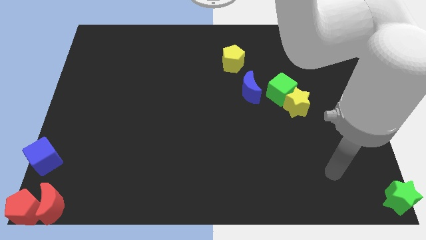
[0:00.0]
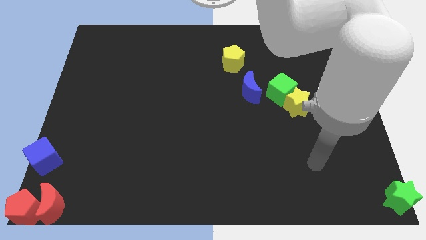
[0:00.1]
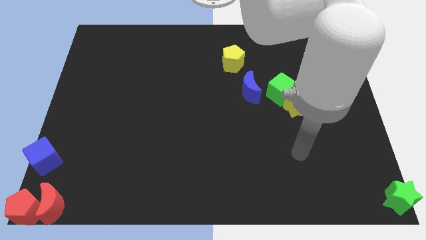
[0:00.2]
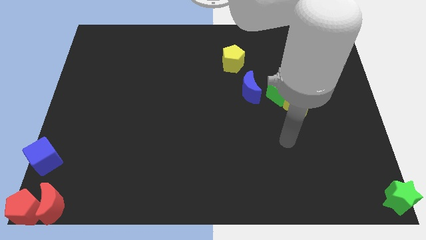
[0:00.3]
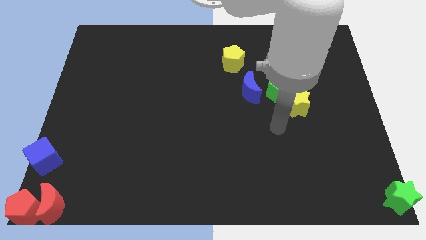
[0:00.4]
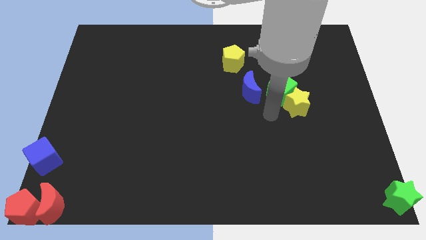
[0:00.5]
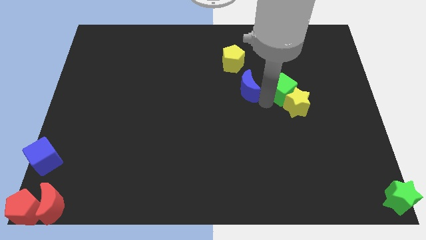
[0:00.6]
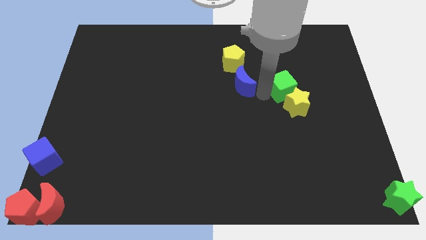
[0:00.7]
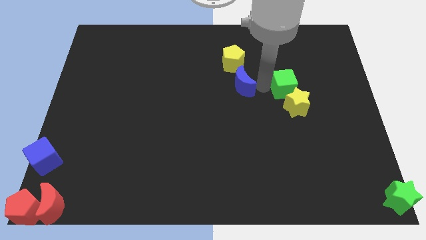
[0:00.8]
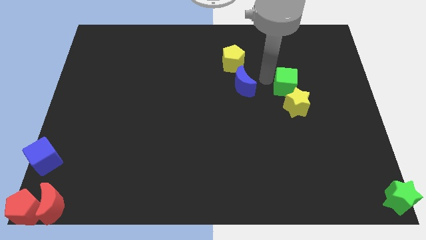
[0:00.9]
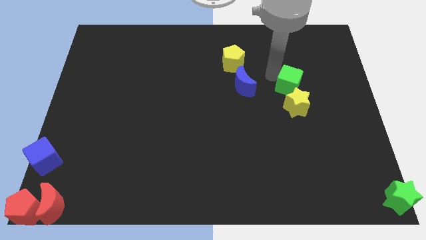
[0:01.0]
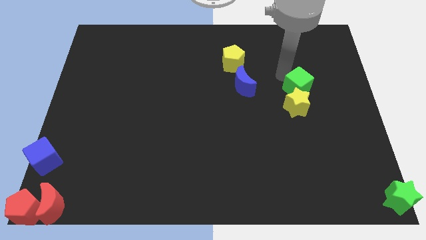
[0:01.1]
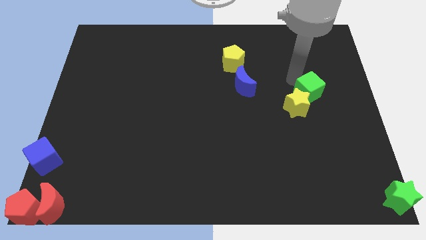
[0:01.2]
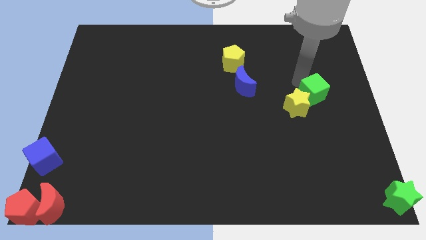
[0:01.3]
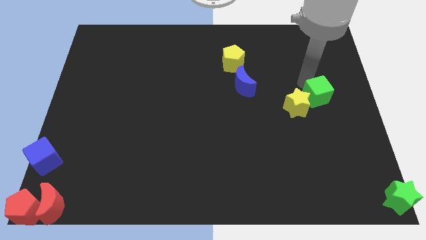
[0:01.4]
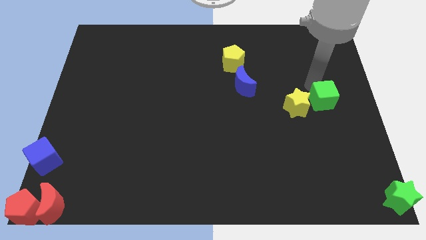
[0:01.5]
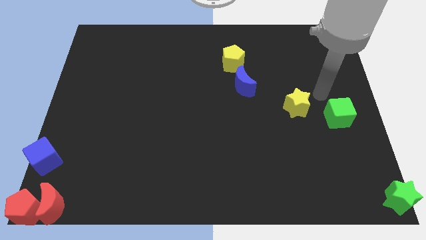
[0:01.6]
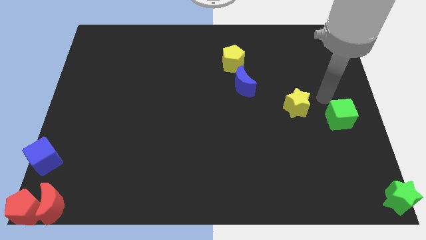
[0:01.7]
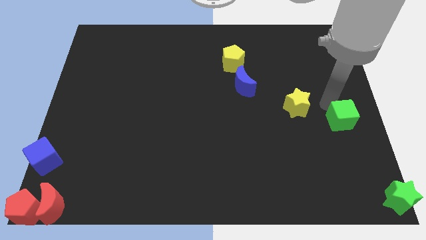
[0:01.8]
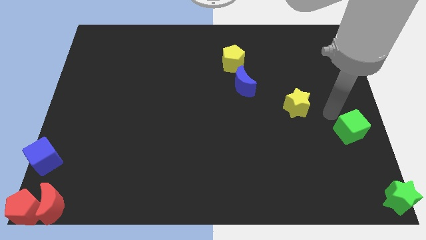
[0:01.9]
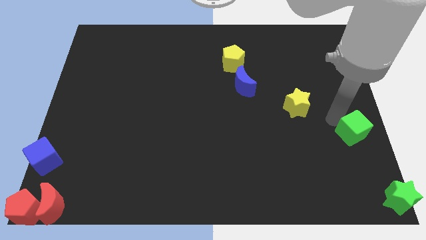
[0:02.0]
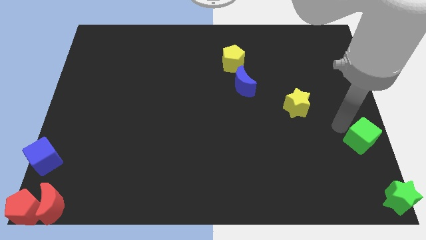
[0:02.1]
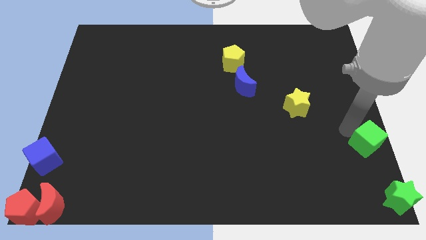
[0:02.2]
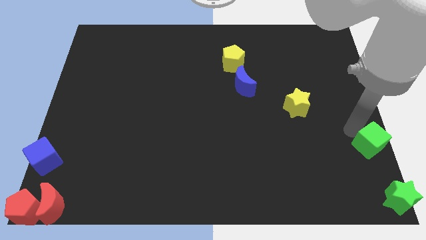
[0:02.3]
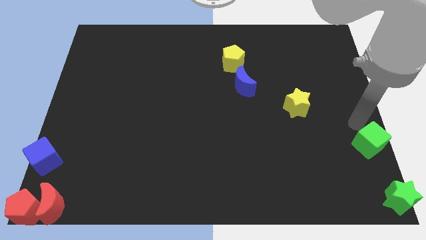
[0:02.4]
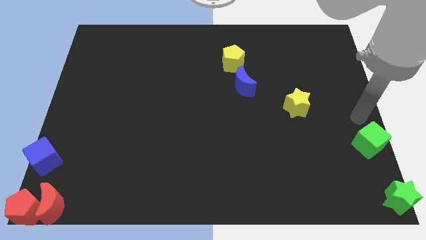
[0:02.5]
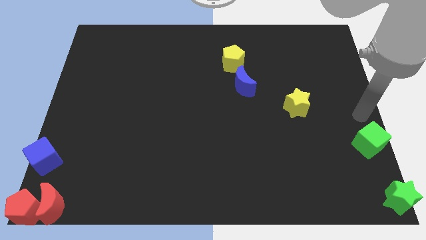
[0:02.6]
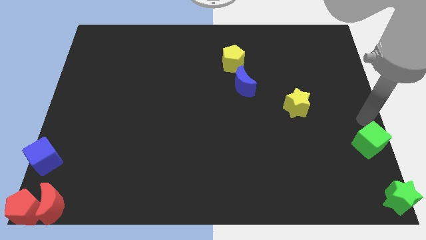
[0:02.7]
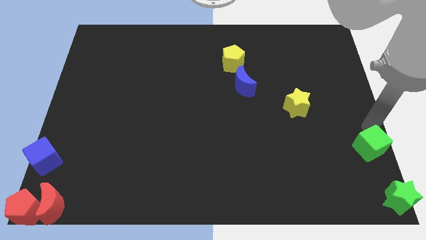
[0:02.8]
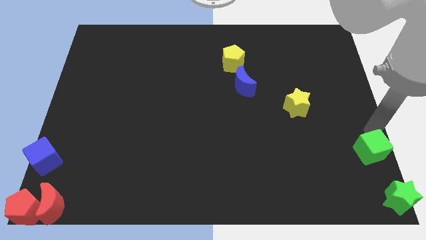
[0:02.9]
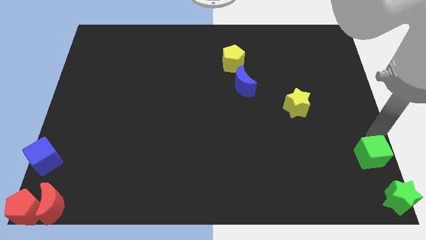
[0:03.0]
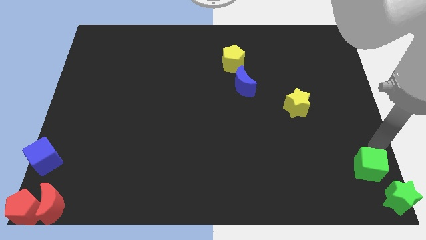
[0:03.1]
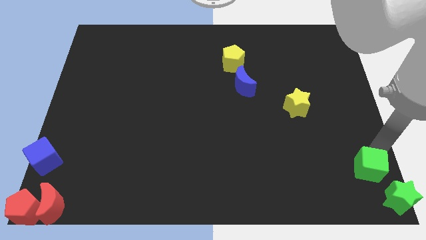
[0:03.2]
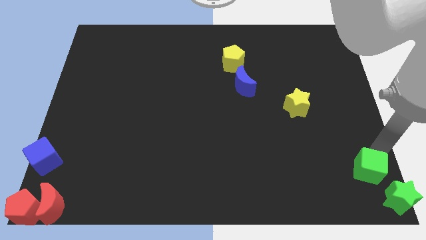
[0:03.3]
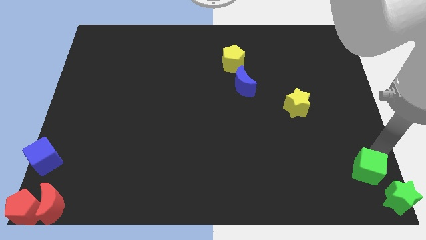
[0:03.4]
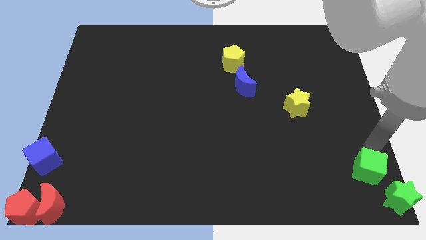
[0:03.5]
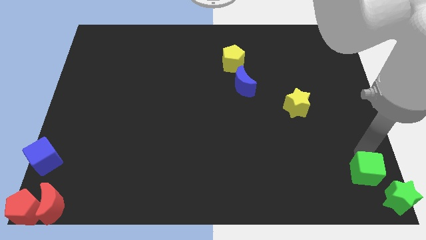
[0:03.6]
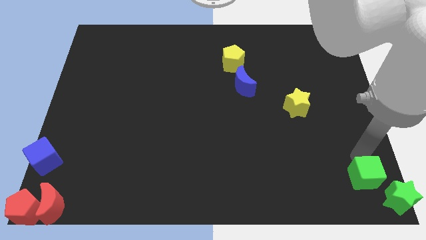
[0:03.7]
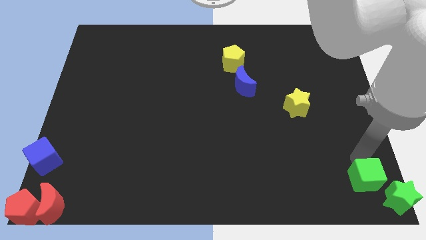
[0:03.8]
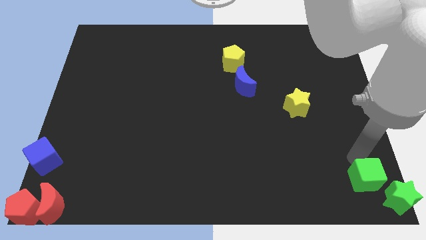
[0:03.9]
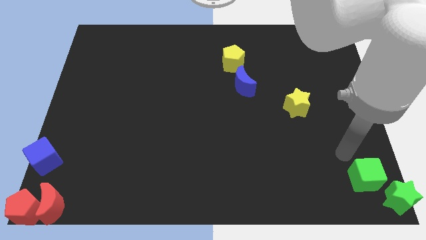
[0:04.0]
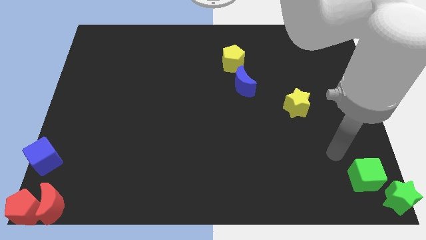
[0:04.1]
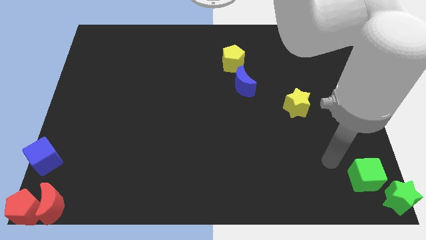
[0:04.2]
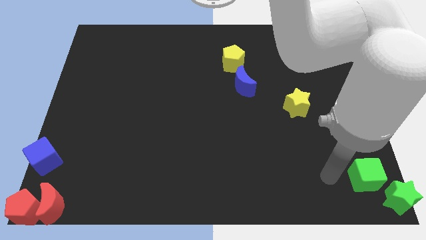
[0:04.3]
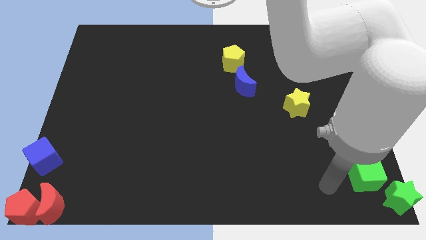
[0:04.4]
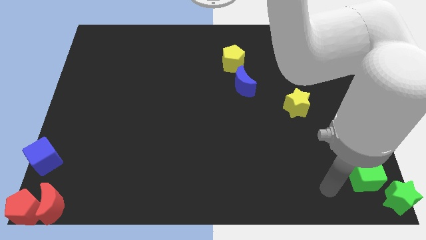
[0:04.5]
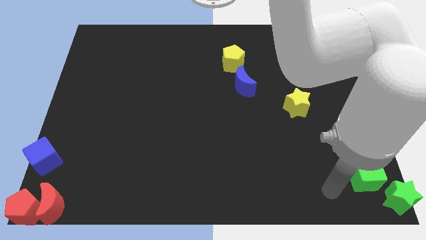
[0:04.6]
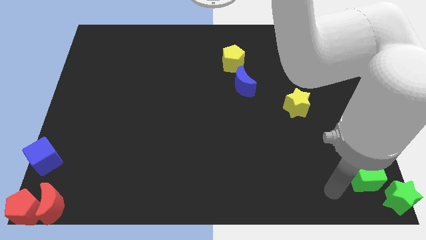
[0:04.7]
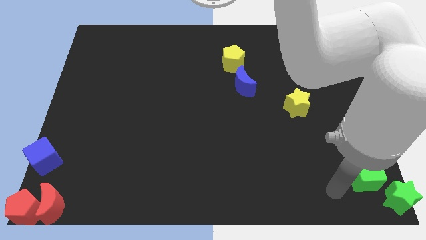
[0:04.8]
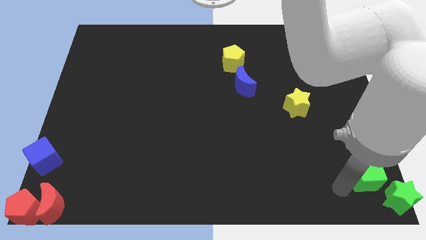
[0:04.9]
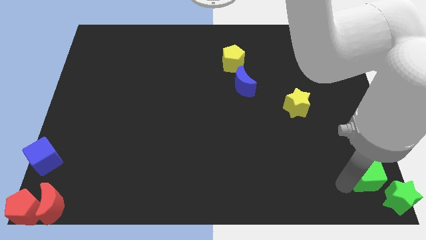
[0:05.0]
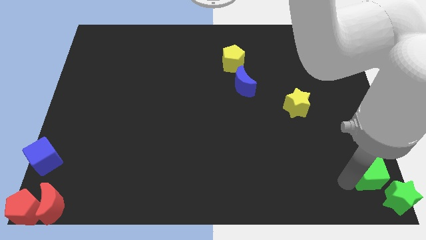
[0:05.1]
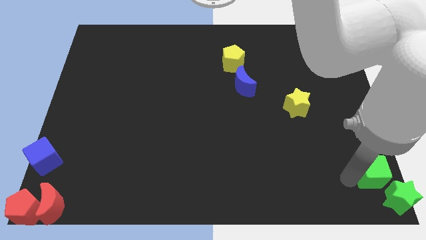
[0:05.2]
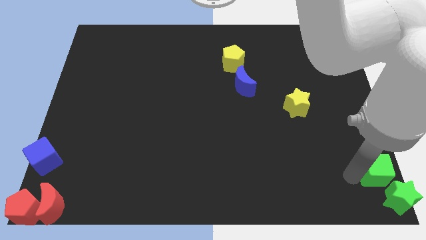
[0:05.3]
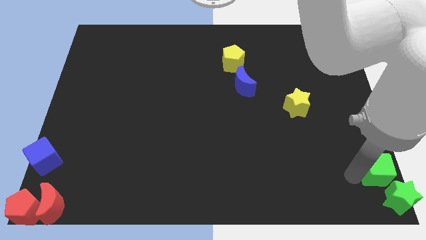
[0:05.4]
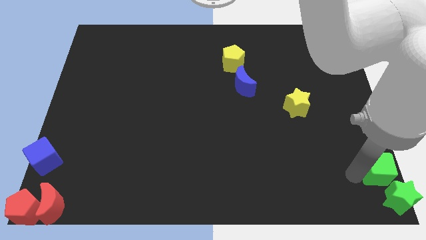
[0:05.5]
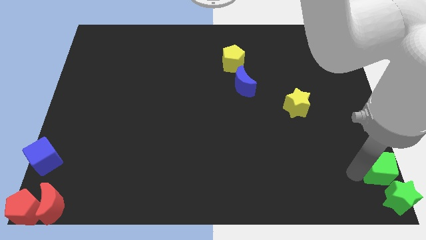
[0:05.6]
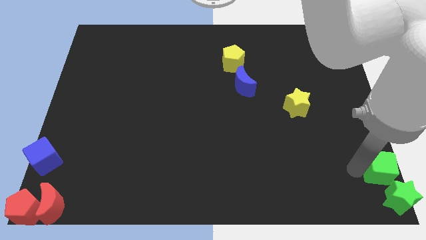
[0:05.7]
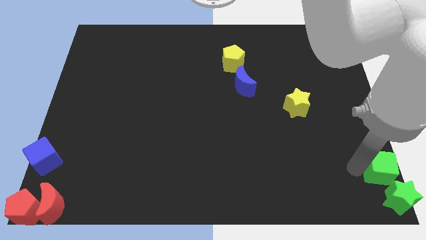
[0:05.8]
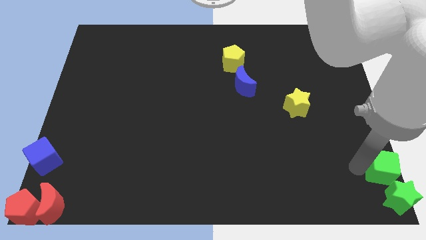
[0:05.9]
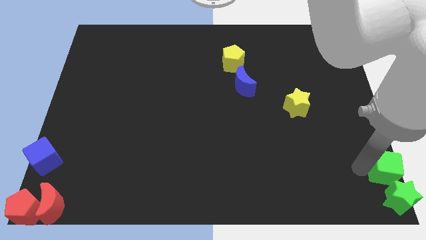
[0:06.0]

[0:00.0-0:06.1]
push the green cube to the top of the green star

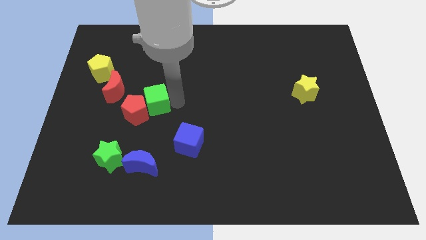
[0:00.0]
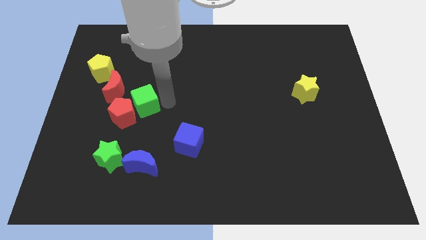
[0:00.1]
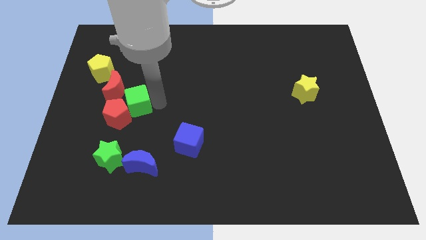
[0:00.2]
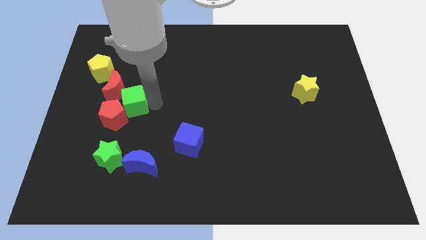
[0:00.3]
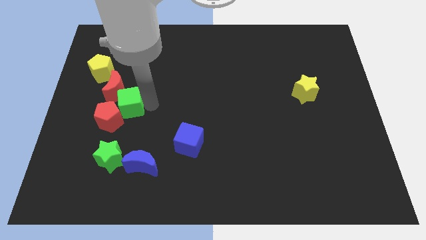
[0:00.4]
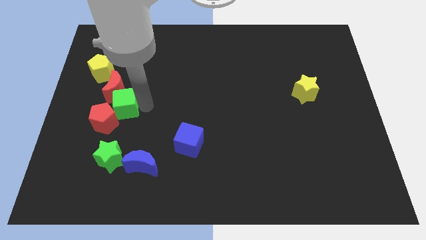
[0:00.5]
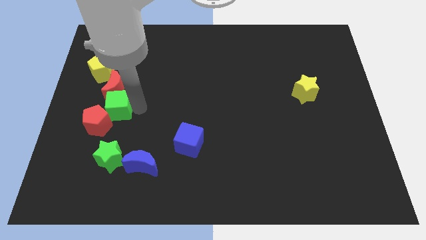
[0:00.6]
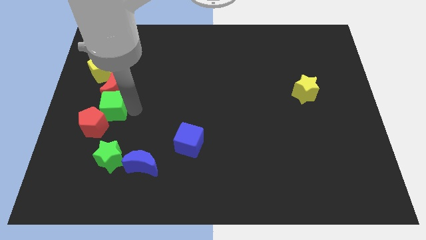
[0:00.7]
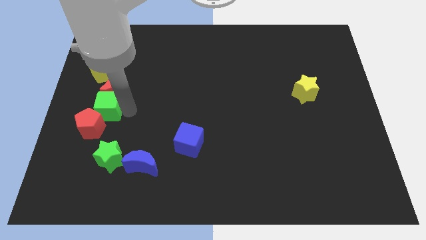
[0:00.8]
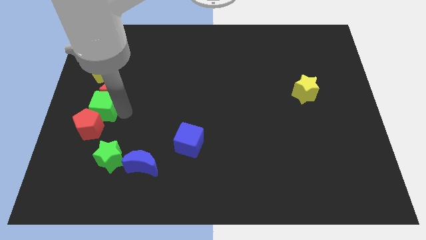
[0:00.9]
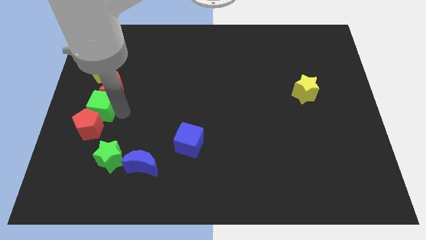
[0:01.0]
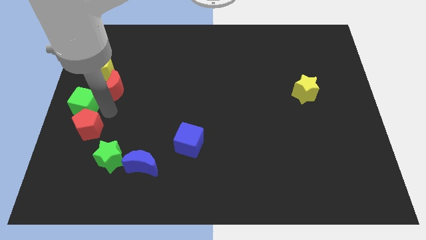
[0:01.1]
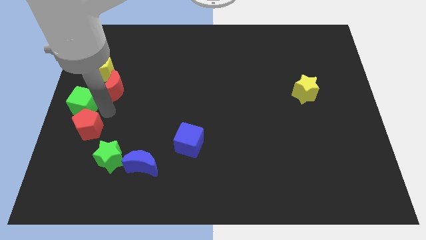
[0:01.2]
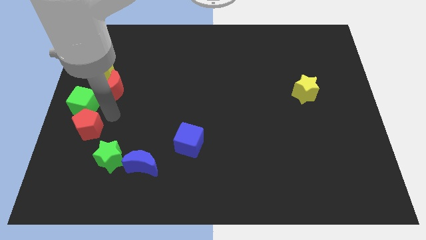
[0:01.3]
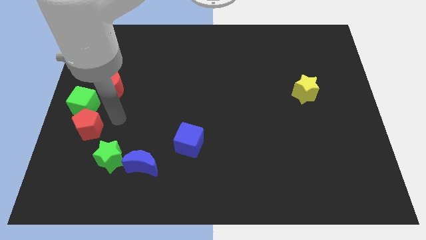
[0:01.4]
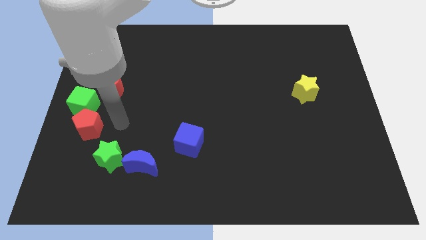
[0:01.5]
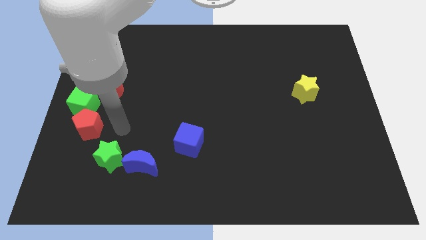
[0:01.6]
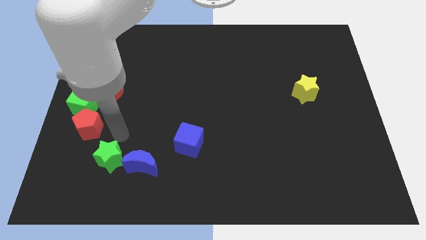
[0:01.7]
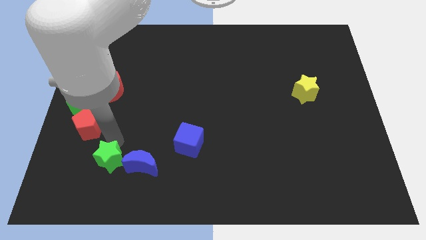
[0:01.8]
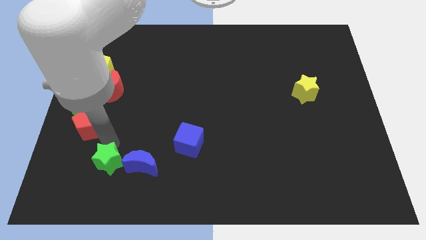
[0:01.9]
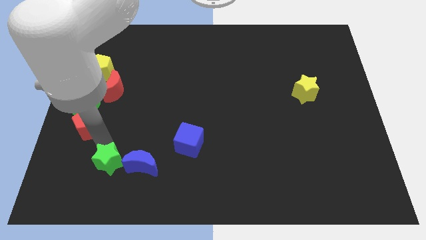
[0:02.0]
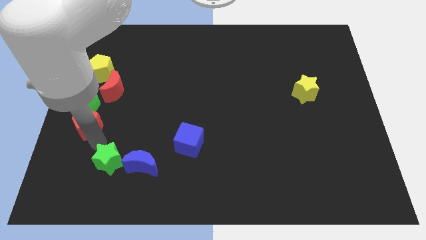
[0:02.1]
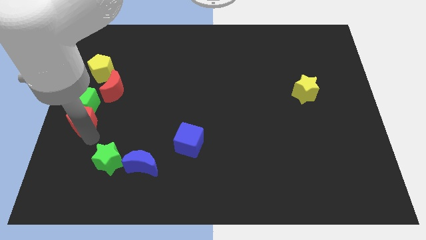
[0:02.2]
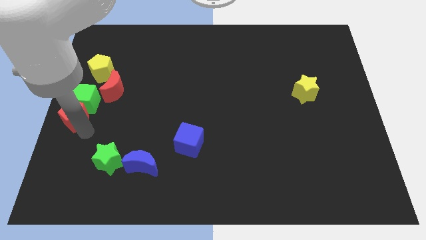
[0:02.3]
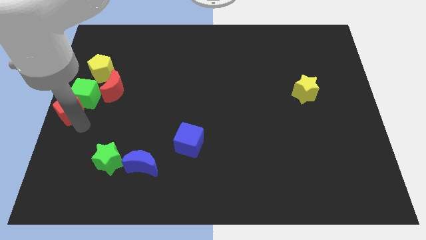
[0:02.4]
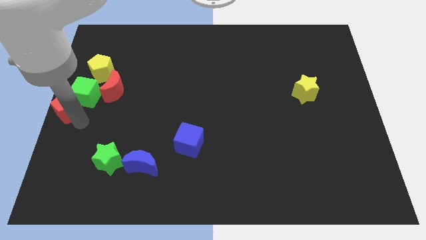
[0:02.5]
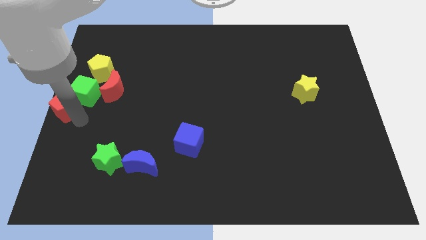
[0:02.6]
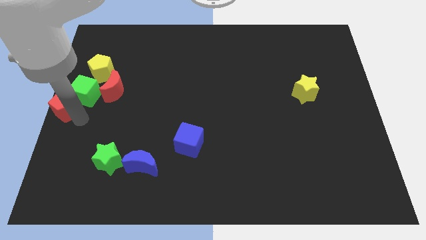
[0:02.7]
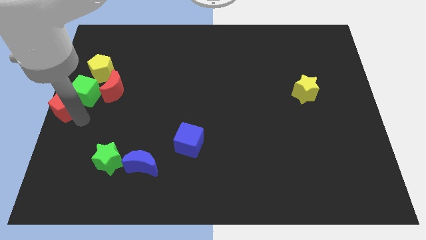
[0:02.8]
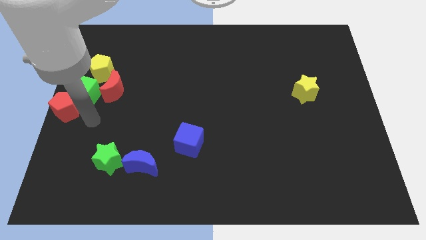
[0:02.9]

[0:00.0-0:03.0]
push the red pentagon into the green cube
